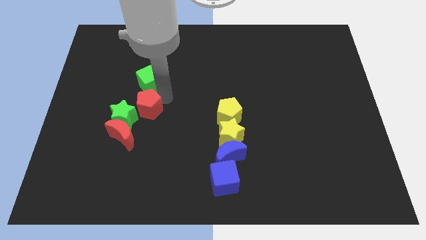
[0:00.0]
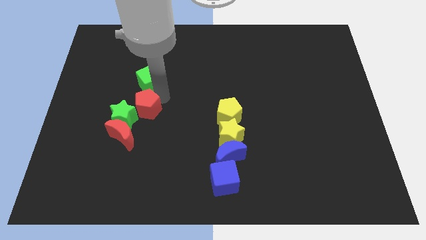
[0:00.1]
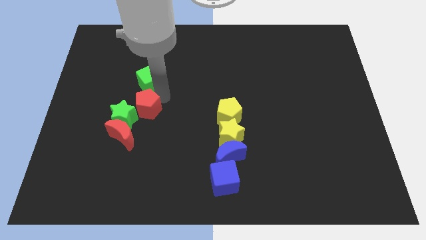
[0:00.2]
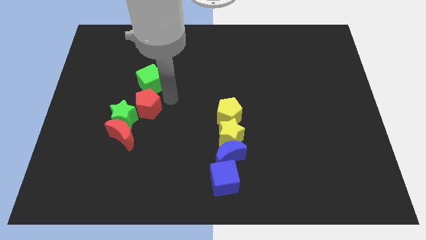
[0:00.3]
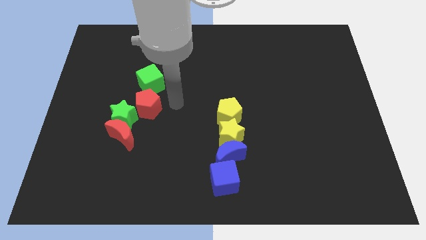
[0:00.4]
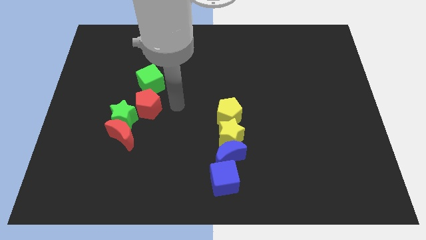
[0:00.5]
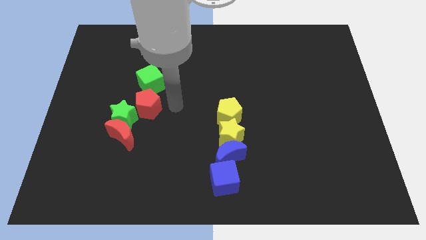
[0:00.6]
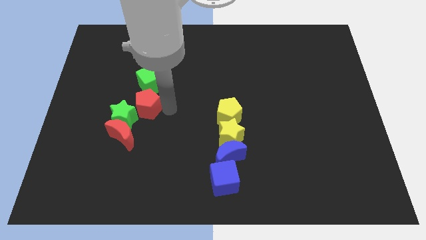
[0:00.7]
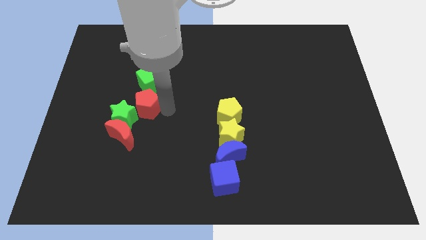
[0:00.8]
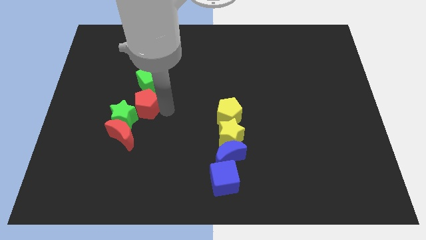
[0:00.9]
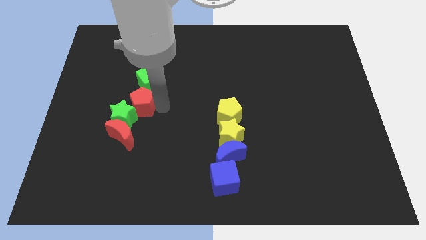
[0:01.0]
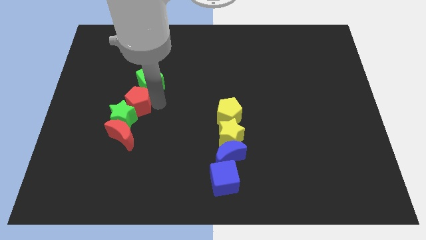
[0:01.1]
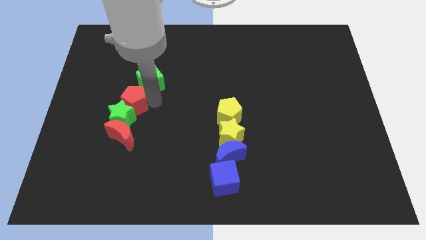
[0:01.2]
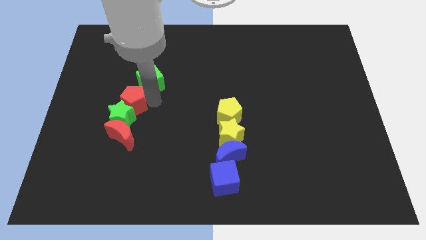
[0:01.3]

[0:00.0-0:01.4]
move the red pentagon to the top of the green star

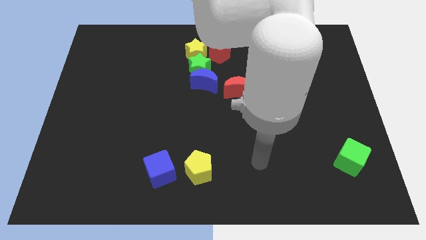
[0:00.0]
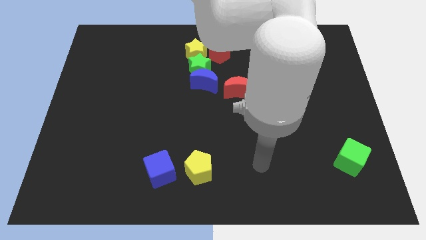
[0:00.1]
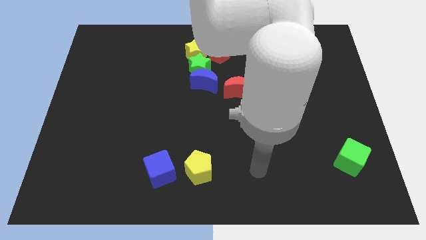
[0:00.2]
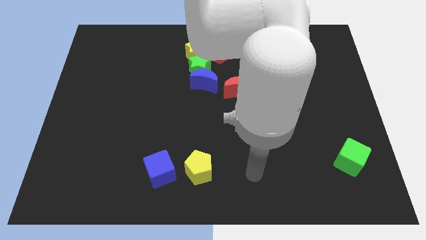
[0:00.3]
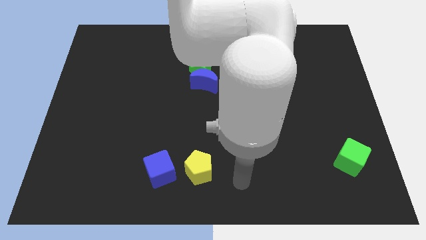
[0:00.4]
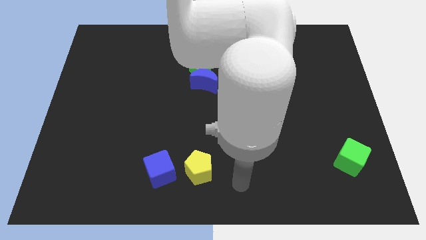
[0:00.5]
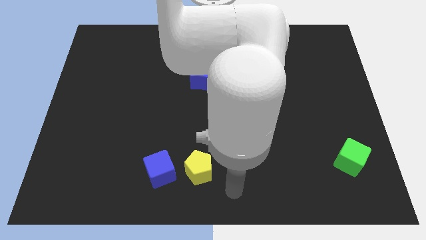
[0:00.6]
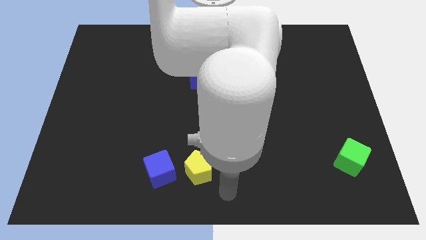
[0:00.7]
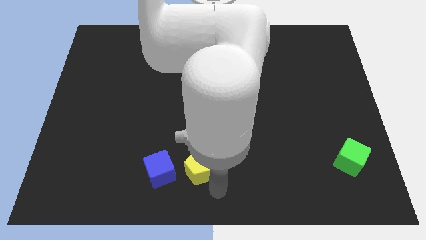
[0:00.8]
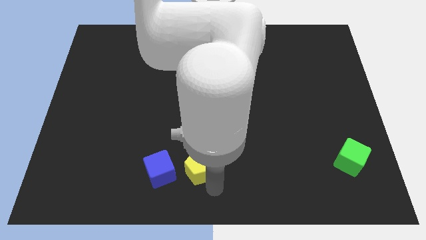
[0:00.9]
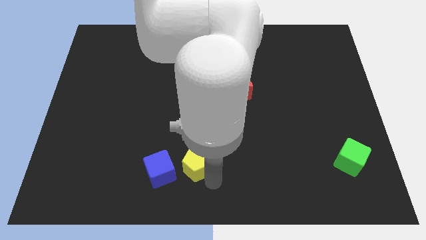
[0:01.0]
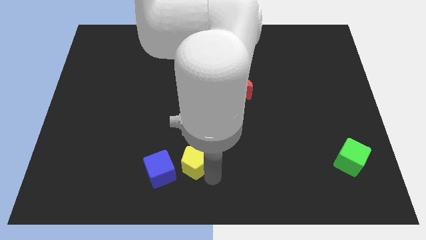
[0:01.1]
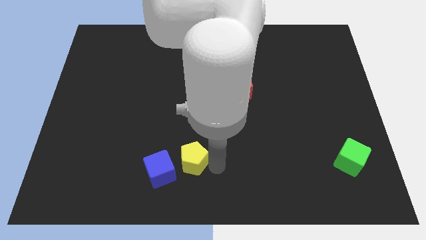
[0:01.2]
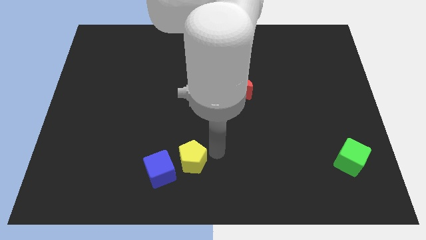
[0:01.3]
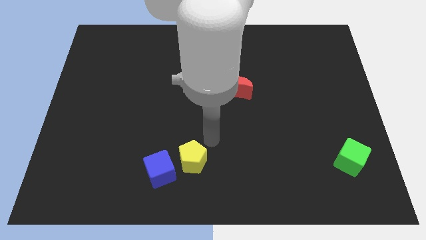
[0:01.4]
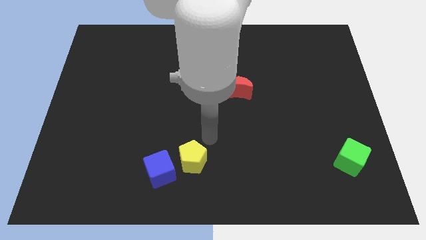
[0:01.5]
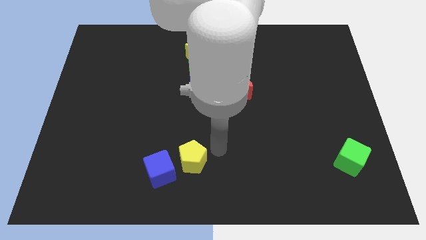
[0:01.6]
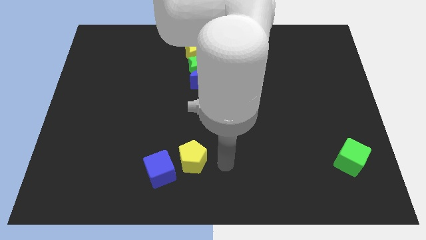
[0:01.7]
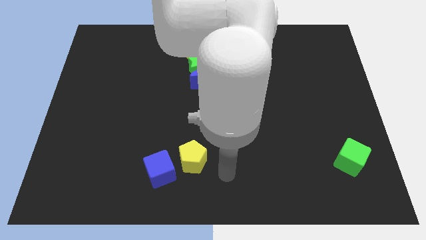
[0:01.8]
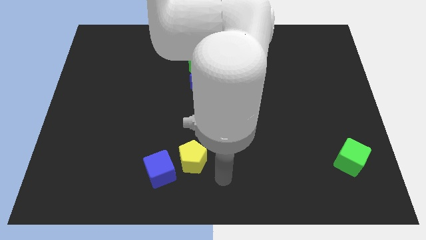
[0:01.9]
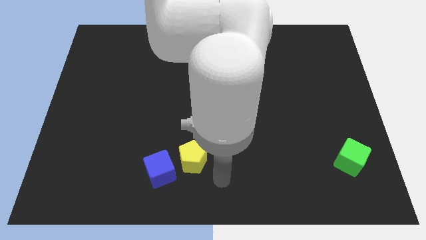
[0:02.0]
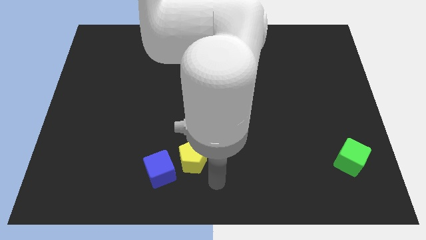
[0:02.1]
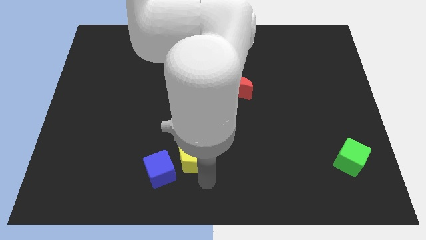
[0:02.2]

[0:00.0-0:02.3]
push the yellow pentagon upwards slightly

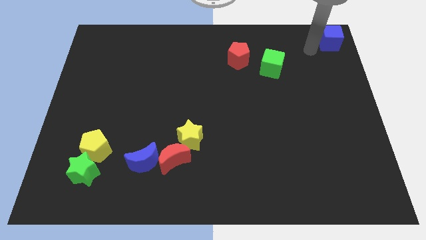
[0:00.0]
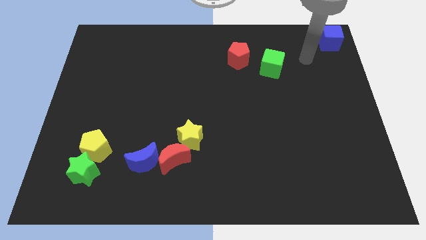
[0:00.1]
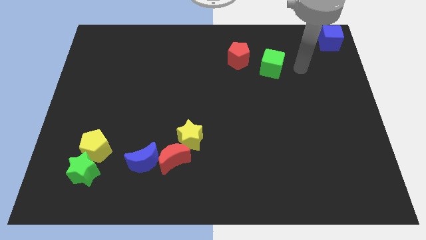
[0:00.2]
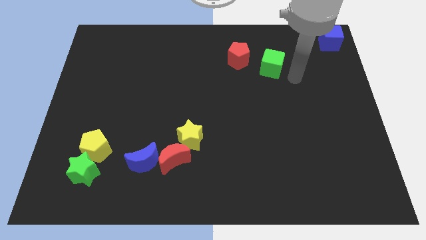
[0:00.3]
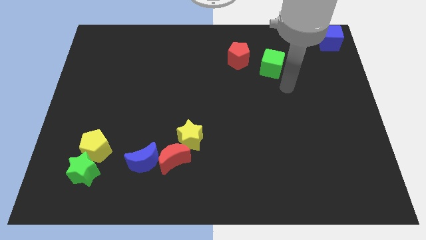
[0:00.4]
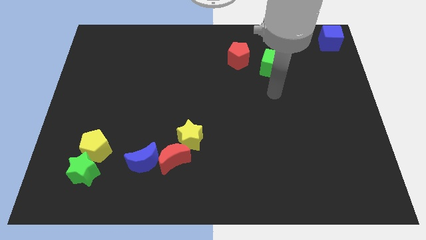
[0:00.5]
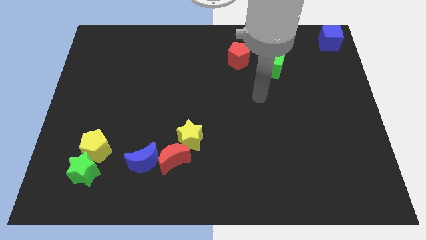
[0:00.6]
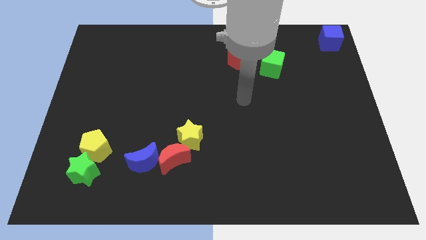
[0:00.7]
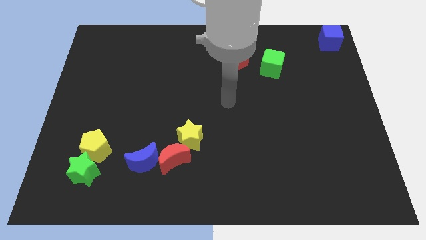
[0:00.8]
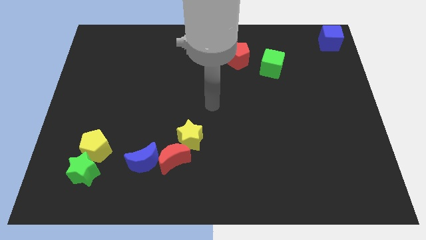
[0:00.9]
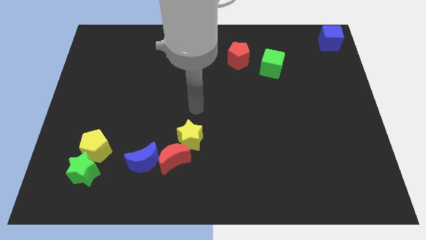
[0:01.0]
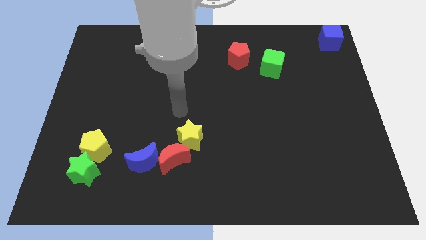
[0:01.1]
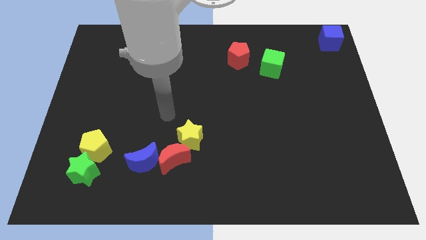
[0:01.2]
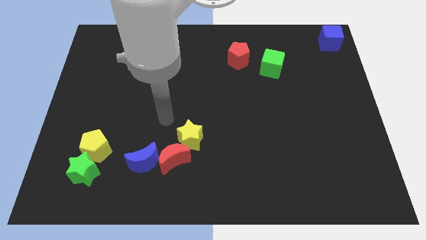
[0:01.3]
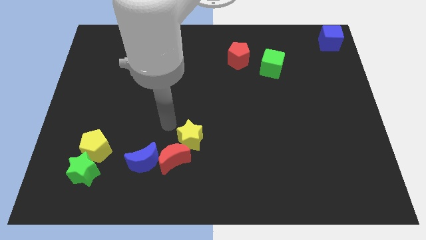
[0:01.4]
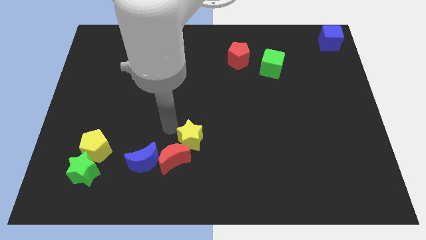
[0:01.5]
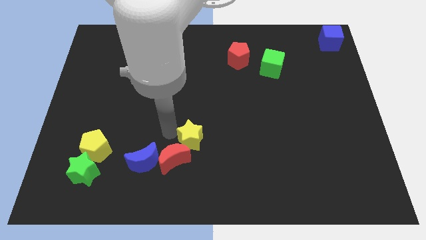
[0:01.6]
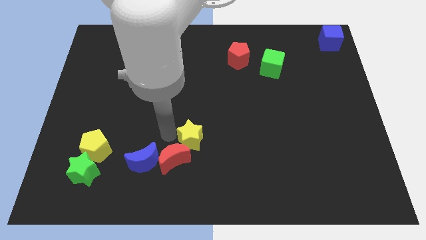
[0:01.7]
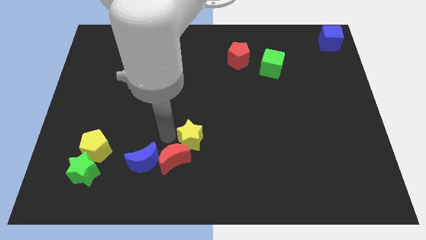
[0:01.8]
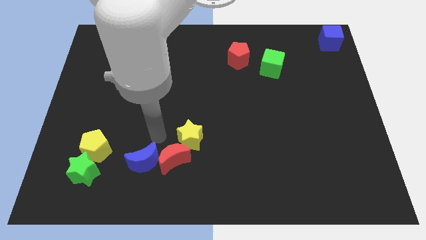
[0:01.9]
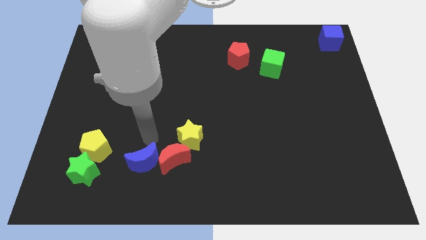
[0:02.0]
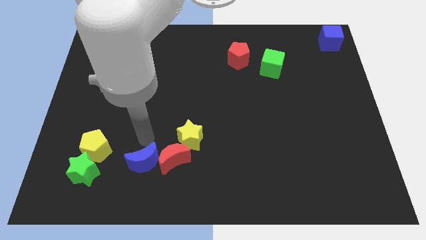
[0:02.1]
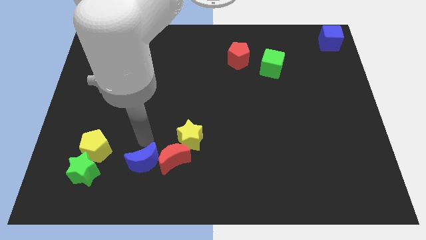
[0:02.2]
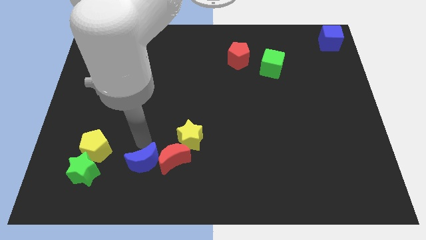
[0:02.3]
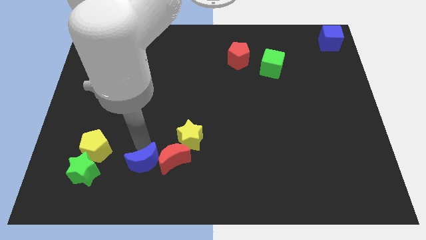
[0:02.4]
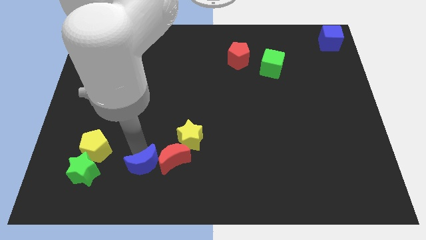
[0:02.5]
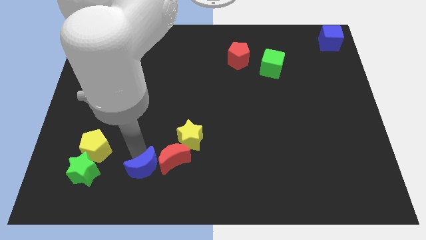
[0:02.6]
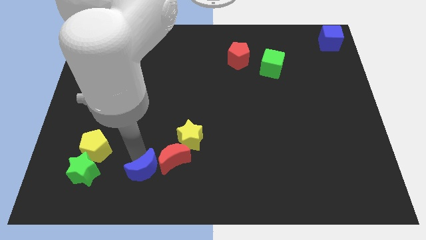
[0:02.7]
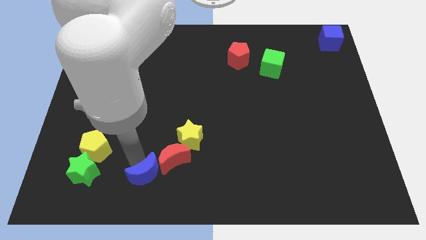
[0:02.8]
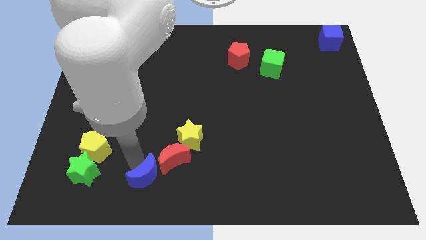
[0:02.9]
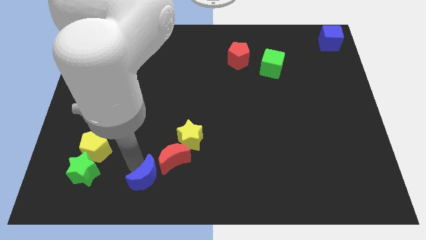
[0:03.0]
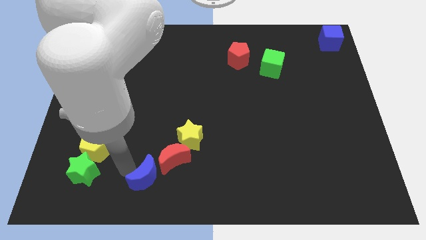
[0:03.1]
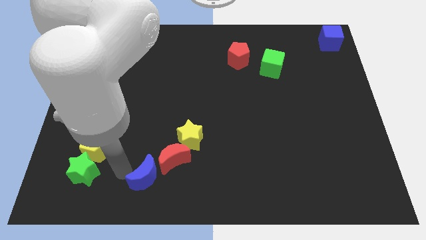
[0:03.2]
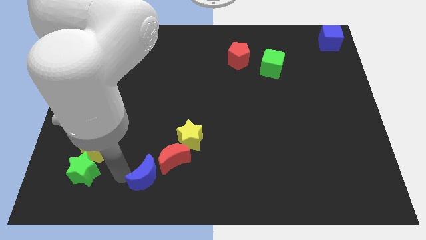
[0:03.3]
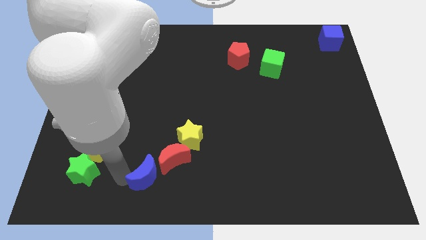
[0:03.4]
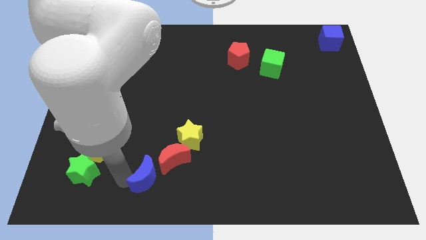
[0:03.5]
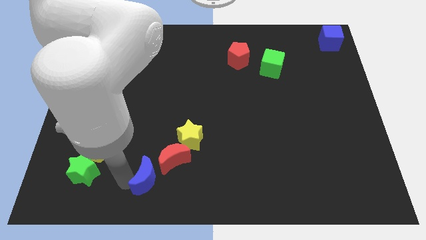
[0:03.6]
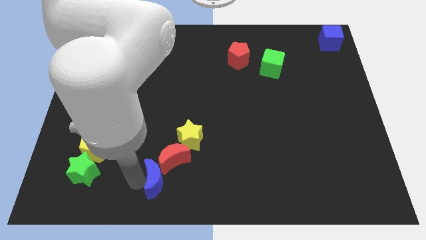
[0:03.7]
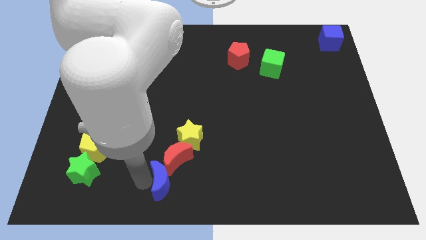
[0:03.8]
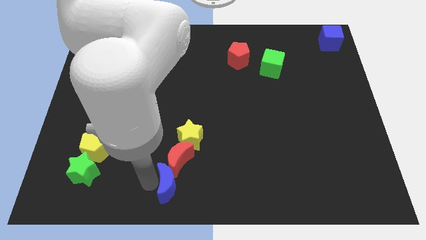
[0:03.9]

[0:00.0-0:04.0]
push the blue crescent into the bottom side of the red moon

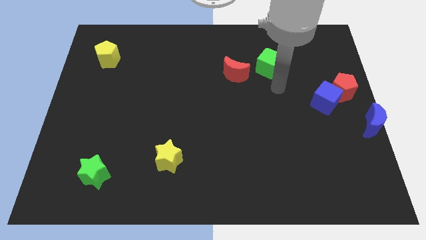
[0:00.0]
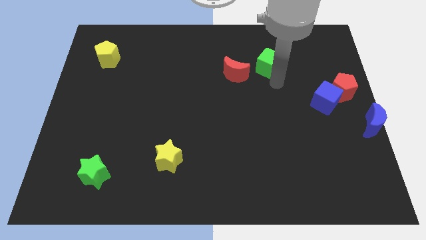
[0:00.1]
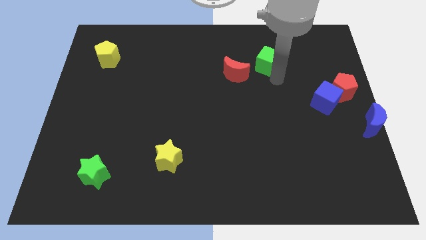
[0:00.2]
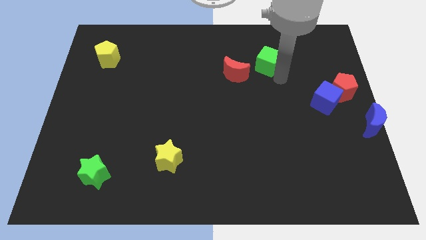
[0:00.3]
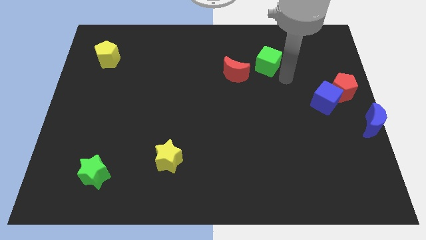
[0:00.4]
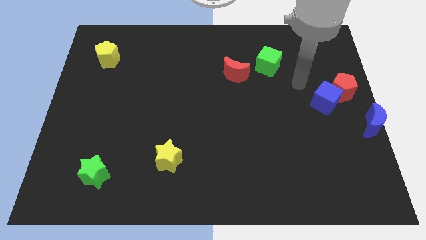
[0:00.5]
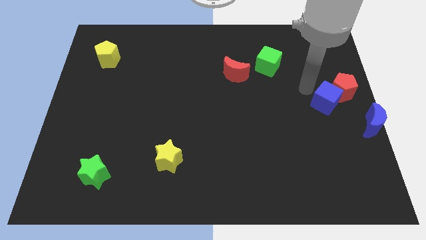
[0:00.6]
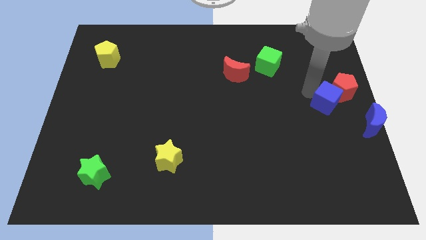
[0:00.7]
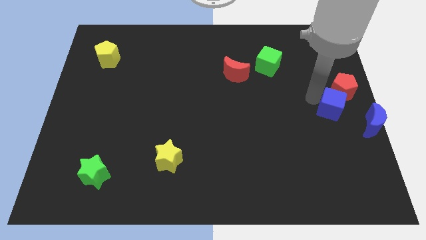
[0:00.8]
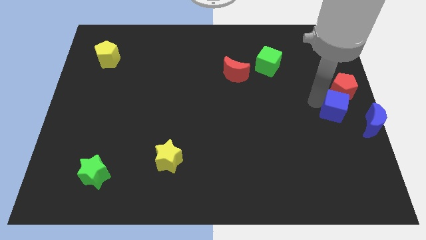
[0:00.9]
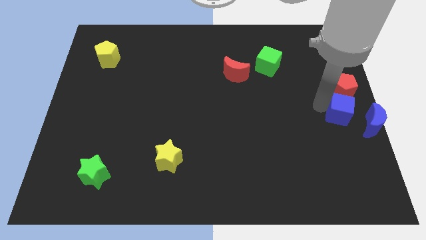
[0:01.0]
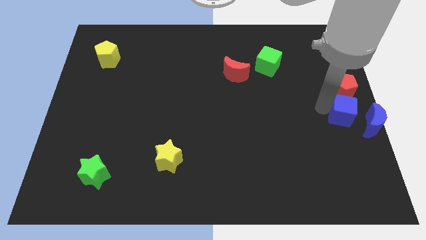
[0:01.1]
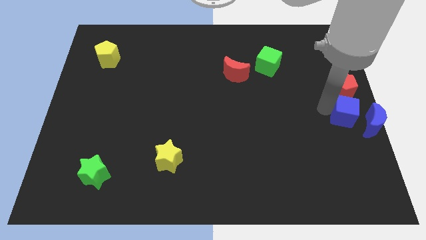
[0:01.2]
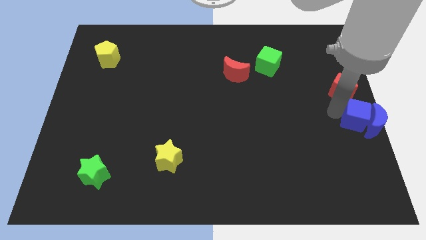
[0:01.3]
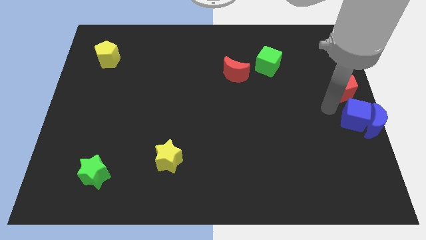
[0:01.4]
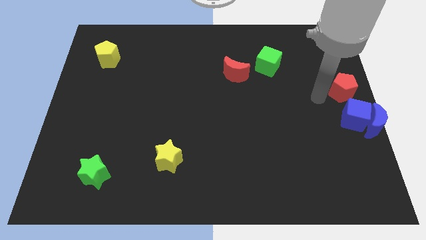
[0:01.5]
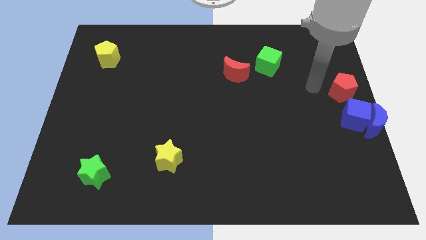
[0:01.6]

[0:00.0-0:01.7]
put the blue blocks together
